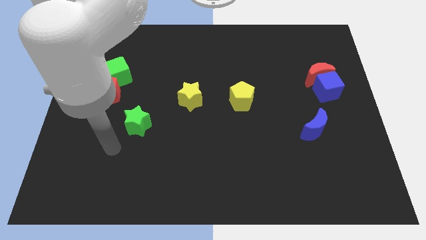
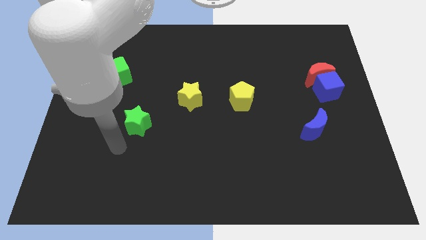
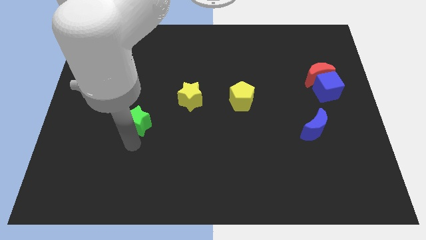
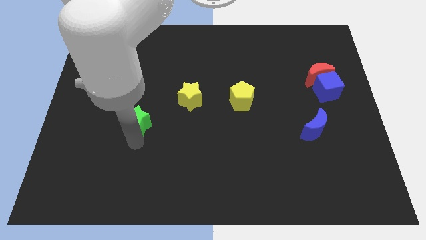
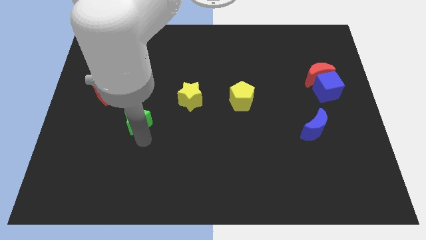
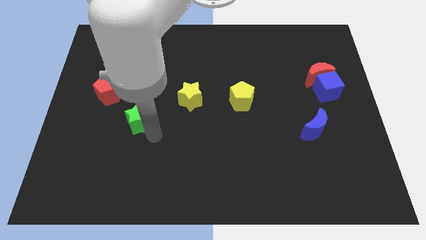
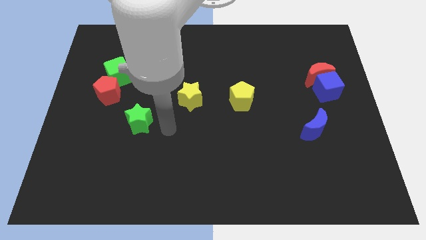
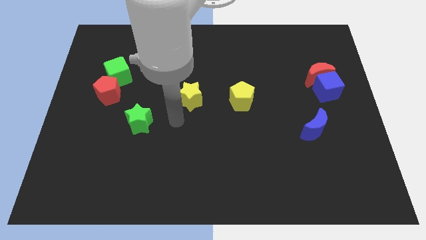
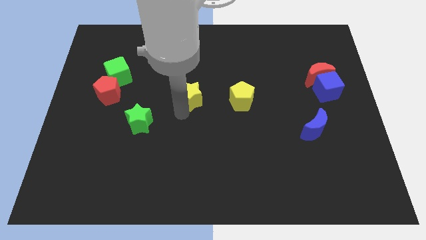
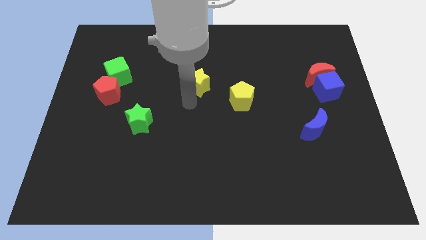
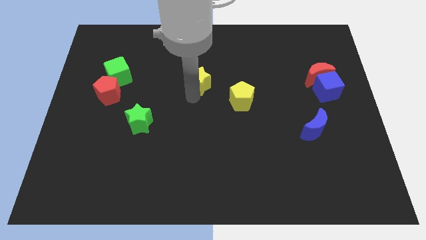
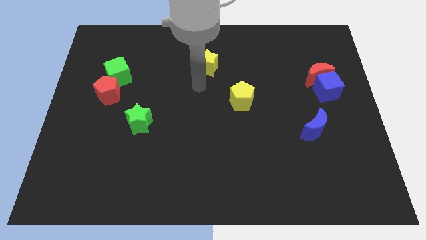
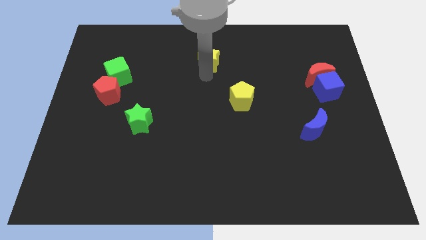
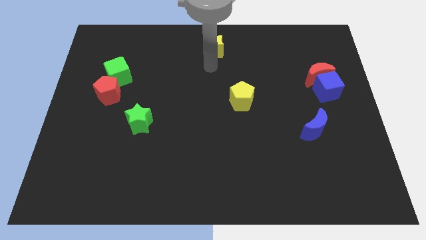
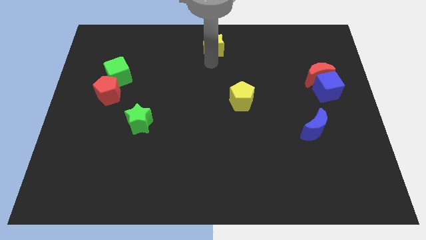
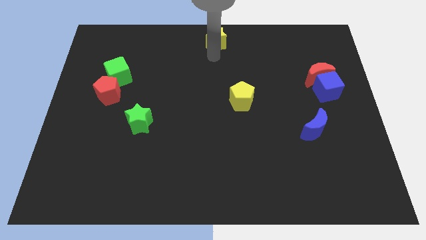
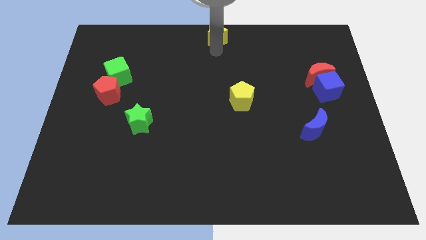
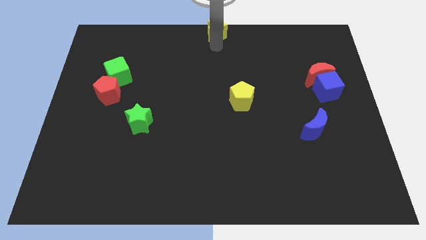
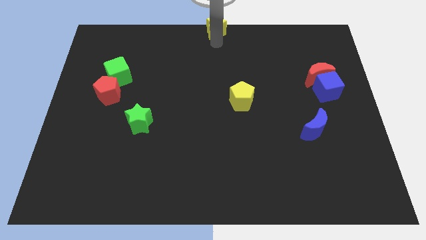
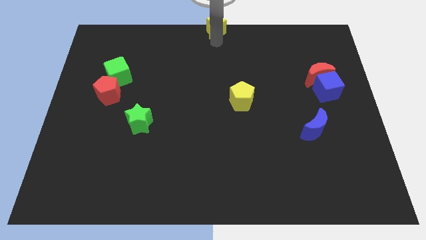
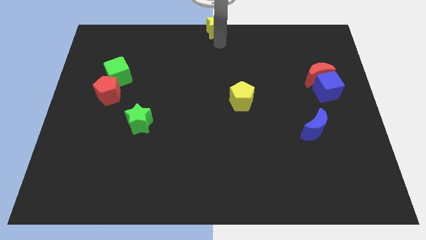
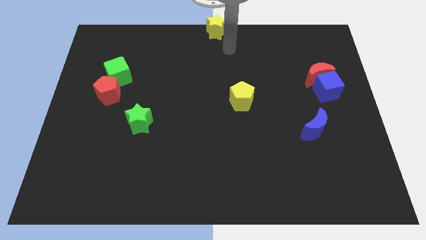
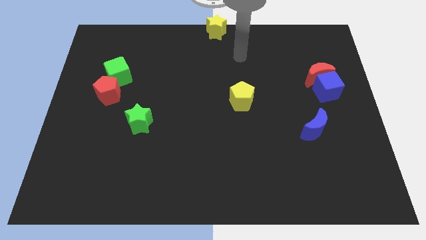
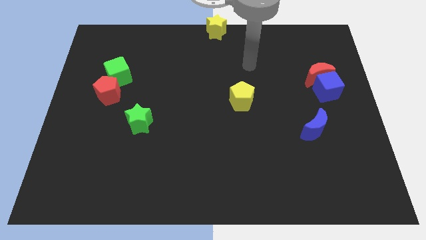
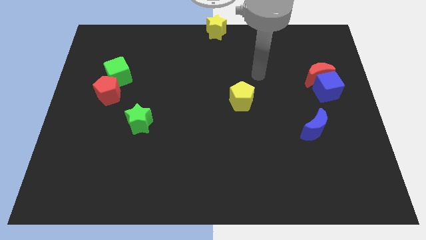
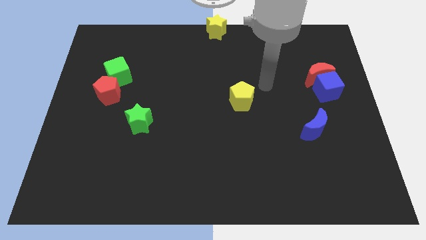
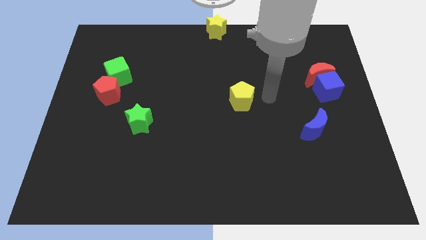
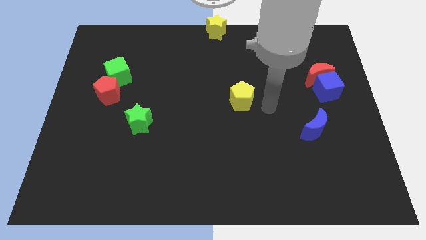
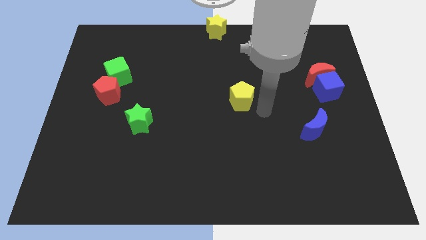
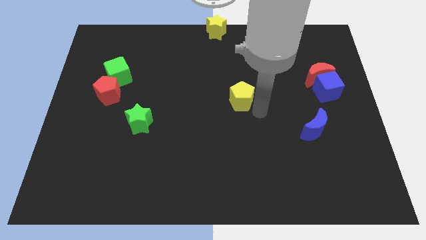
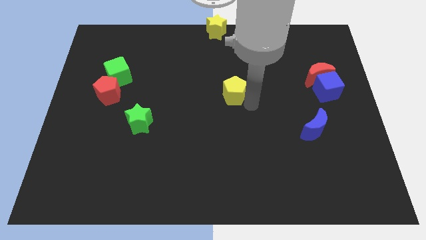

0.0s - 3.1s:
place the yellow star at the top center of the board

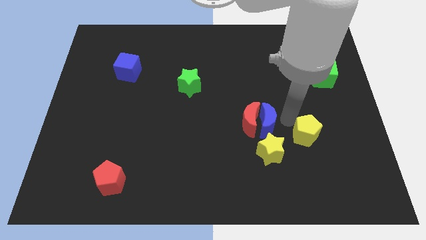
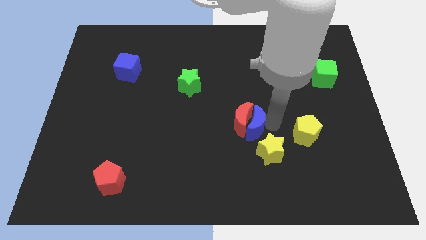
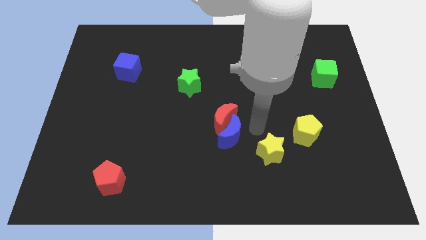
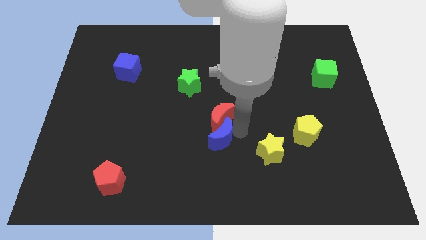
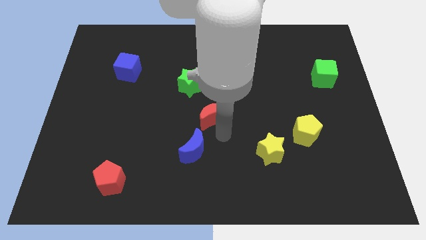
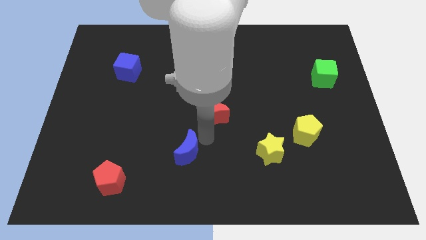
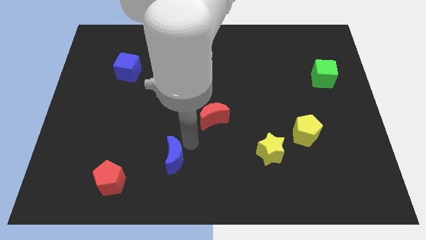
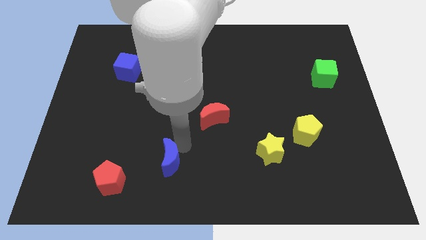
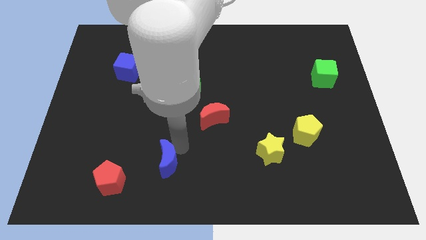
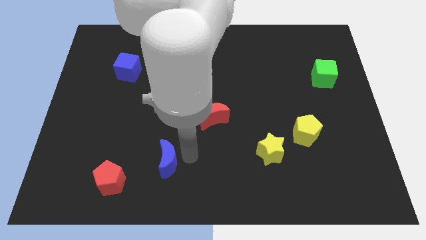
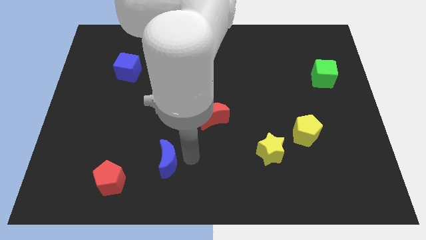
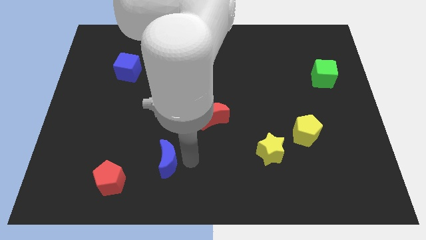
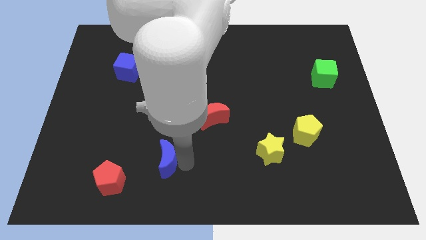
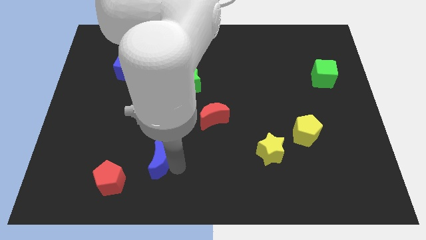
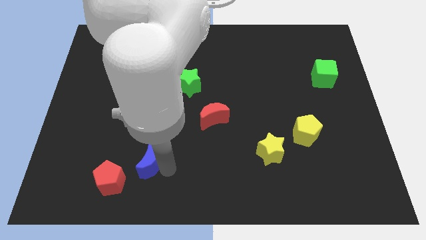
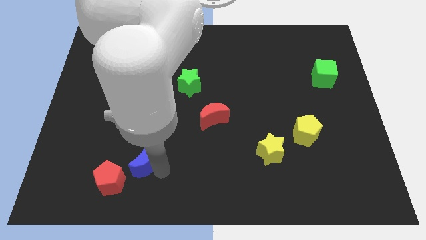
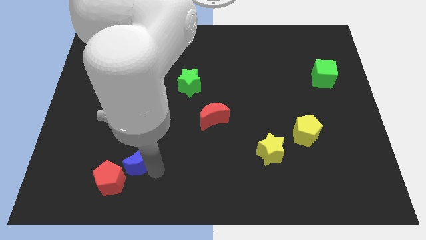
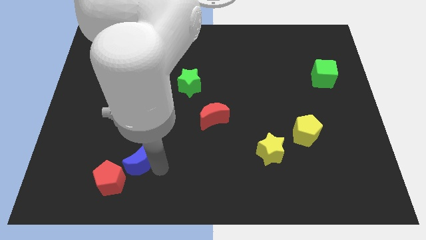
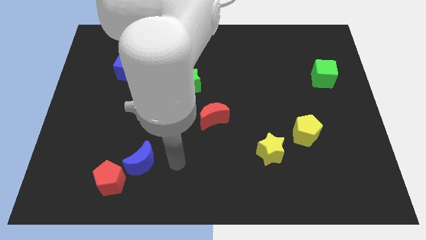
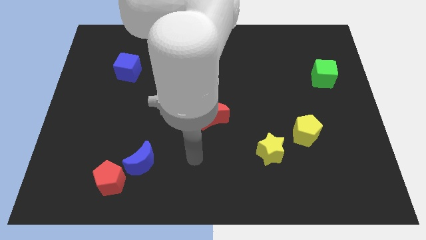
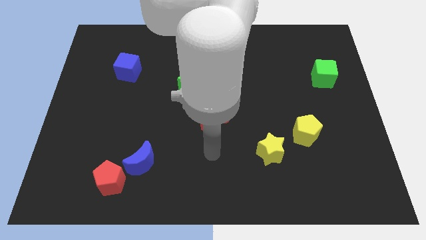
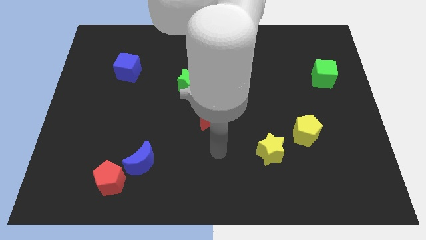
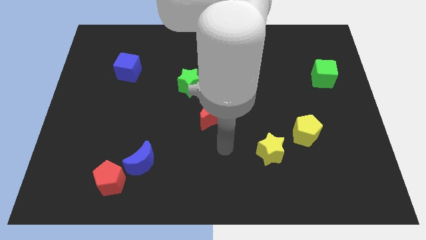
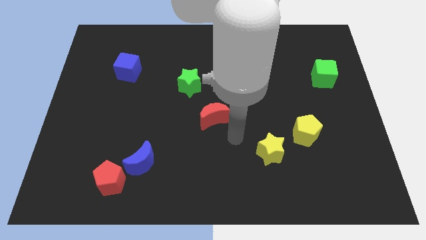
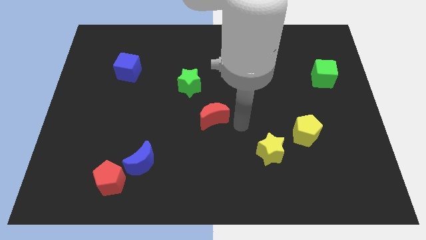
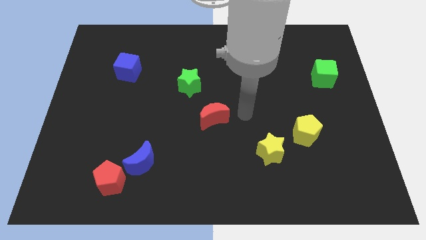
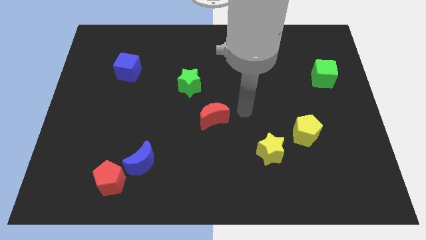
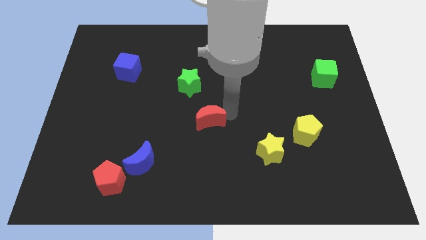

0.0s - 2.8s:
place the blue moon in between the red moon and red pentagon

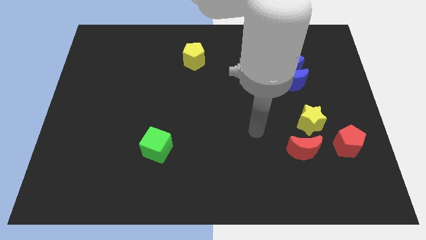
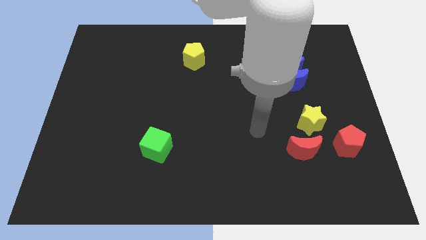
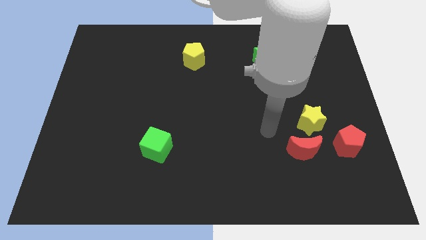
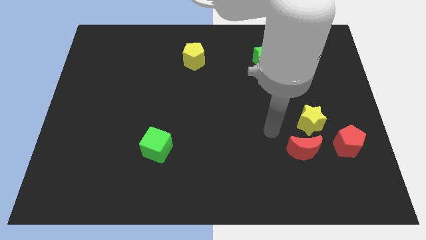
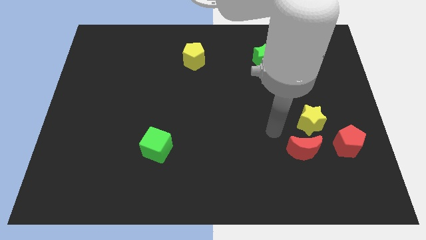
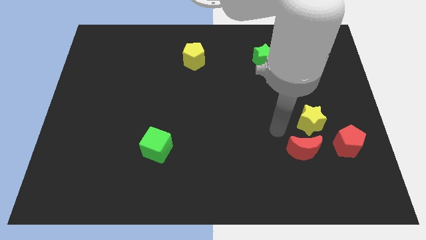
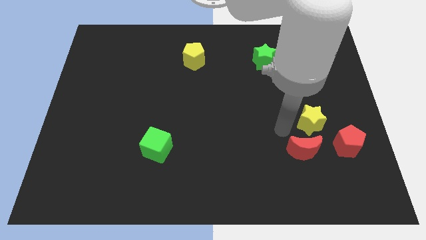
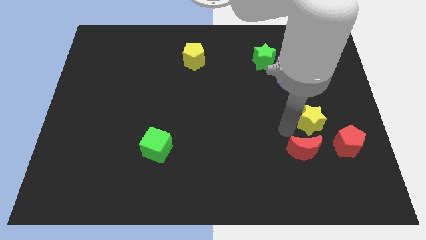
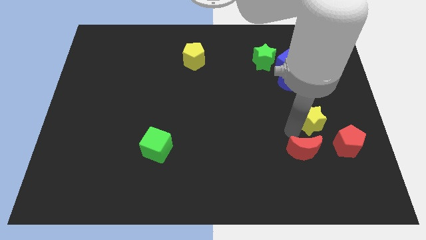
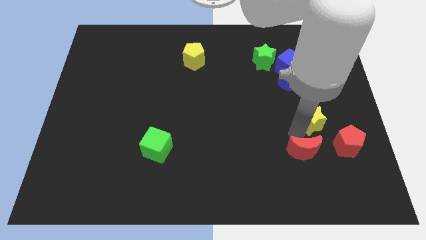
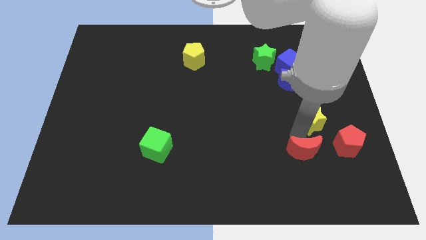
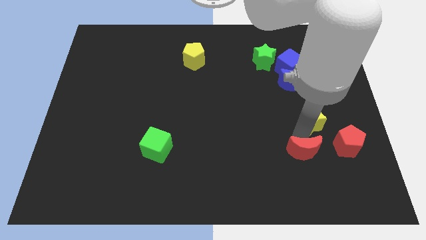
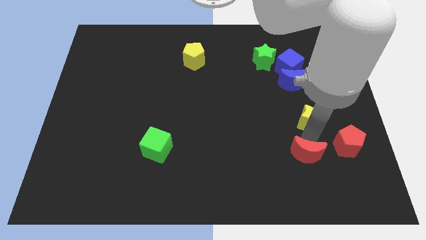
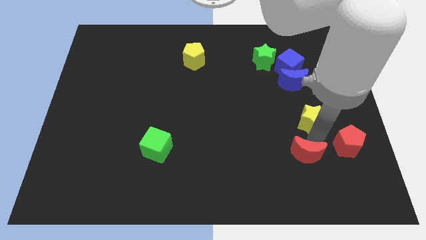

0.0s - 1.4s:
push the red crescent slightly to the bottom

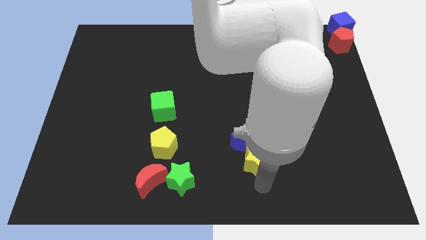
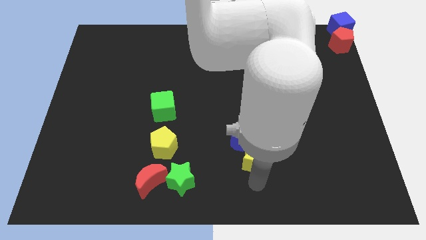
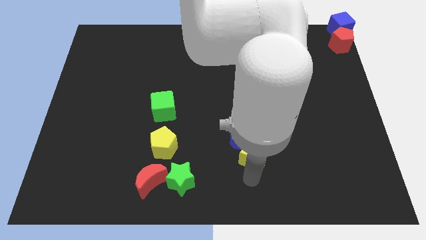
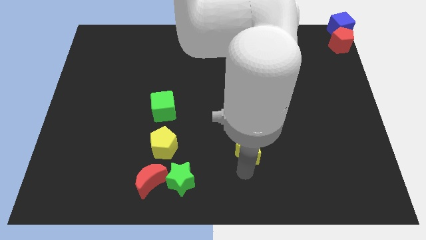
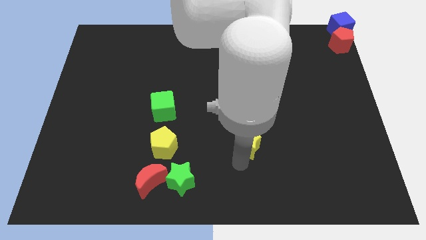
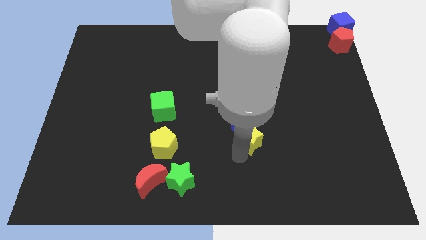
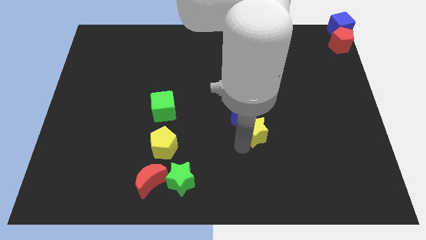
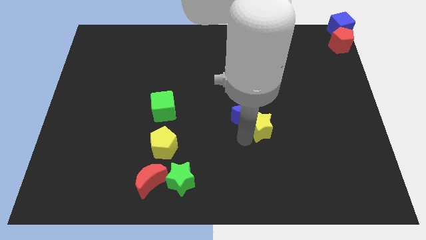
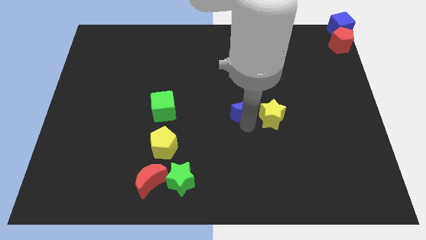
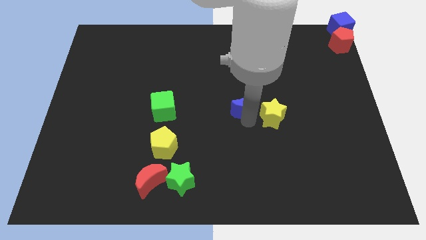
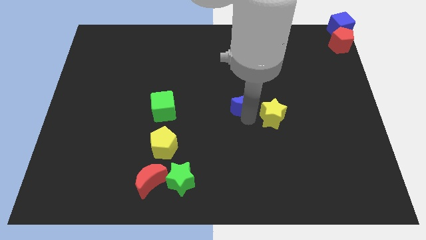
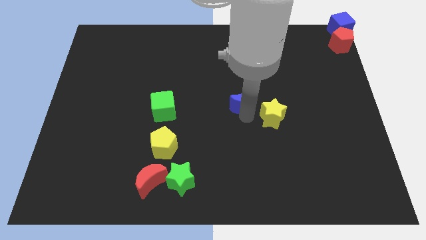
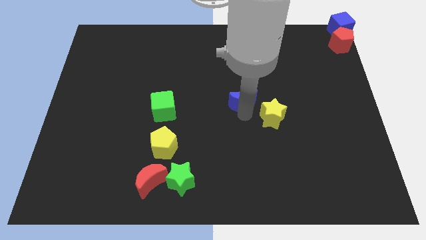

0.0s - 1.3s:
push the yellow star into the blue crescent

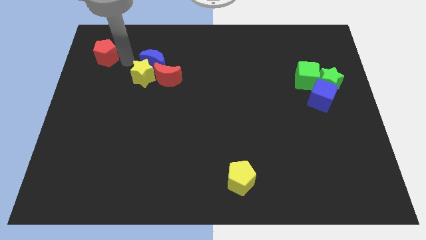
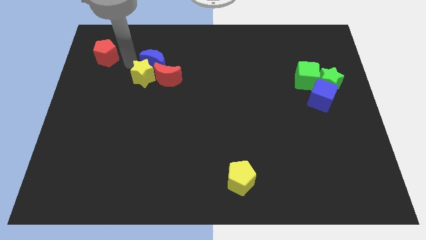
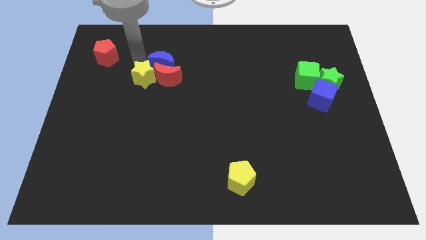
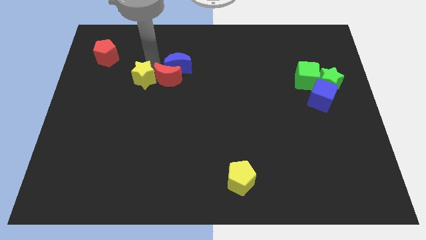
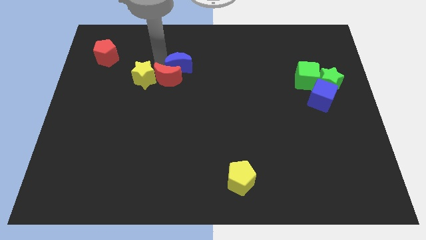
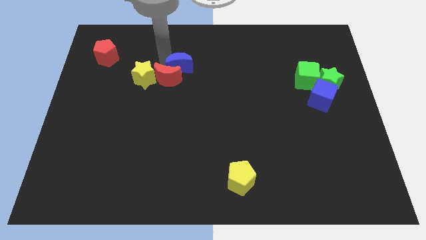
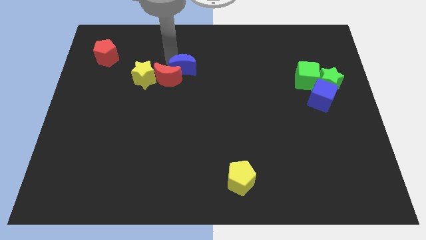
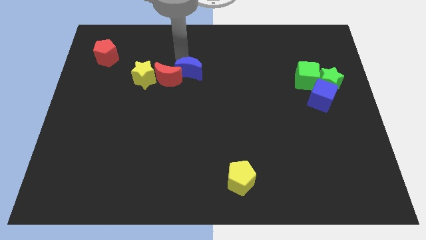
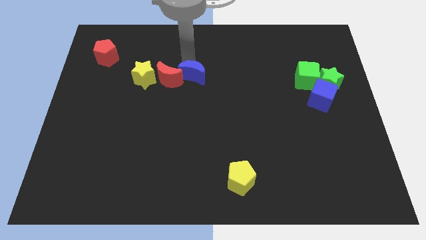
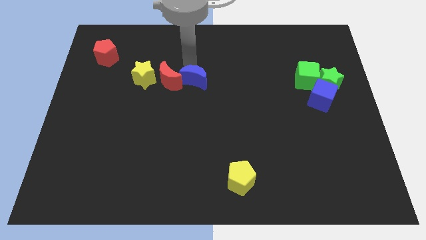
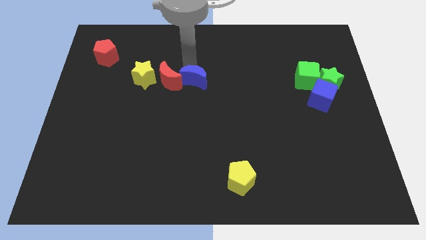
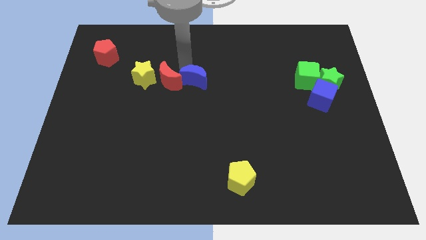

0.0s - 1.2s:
push the blue crescent away from yellow star
